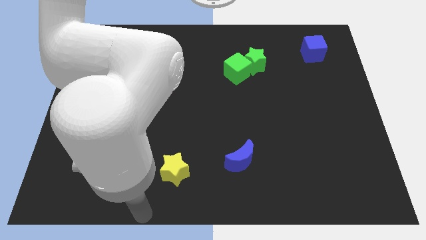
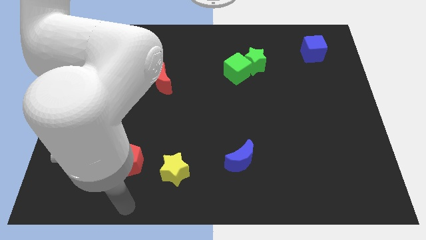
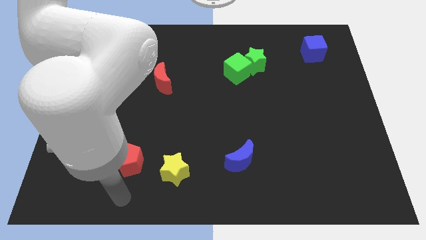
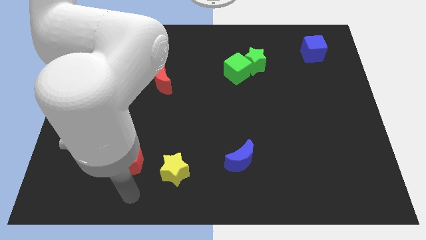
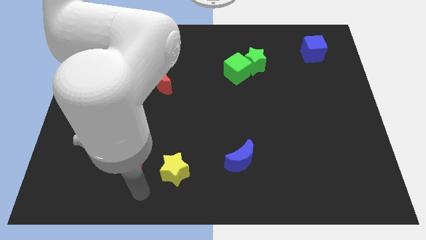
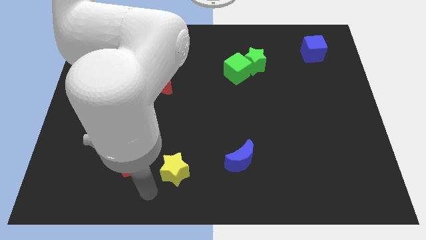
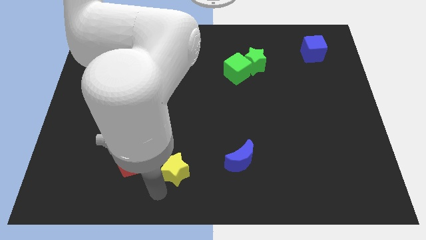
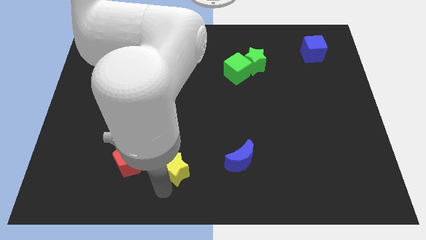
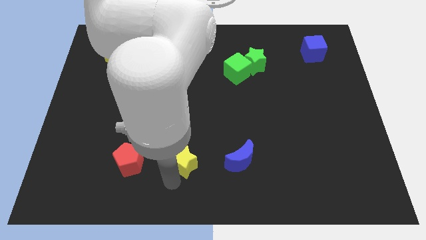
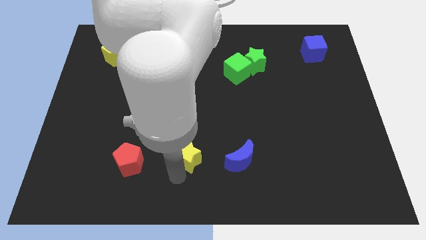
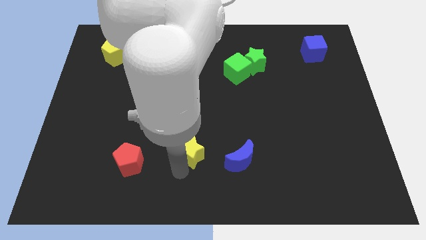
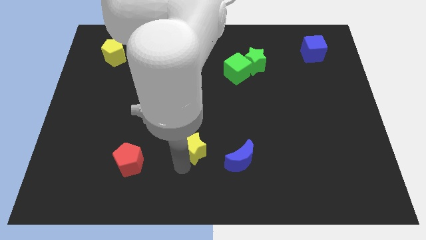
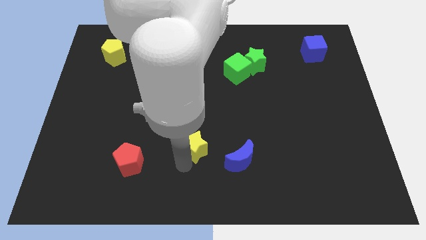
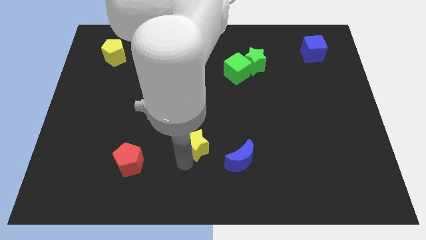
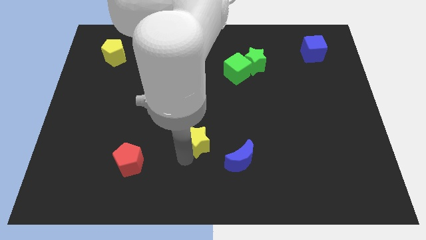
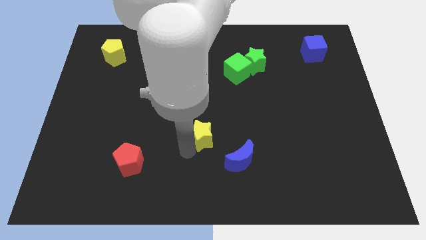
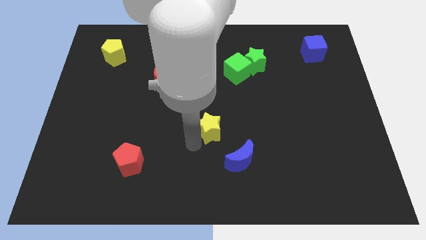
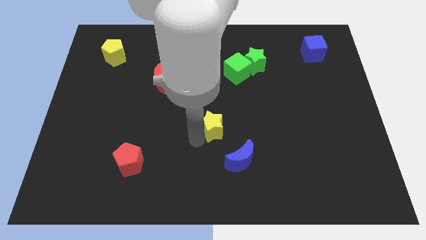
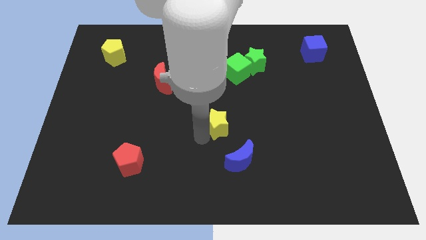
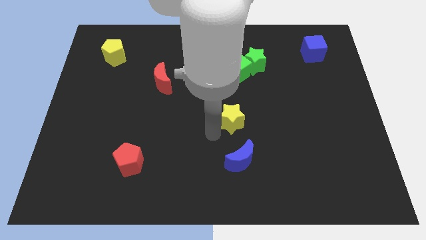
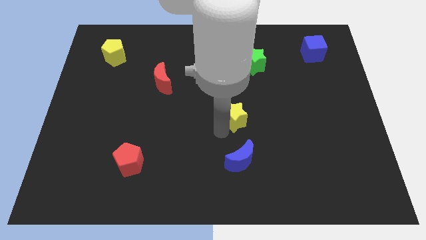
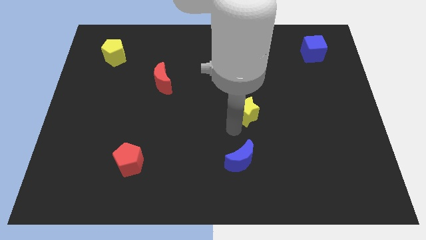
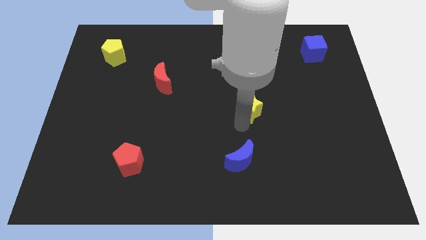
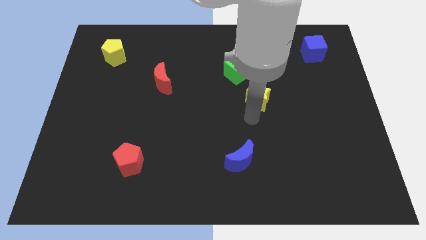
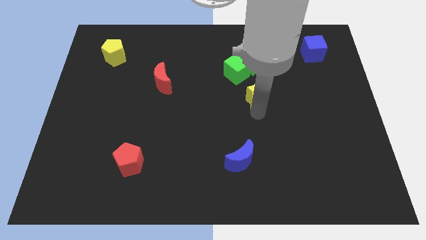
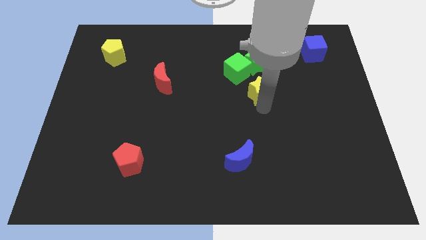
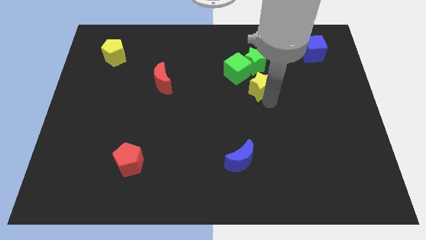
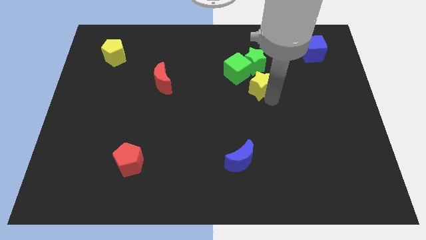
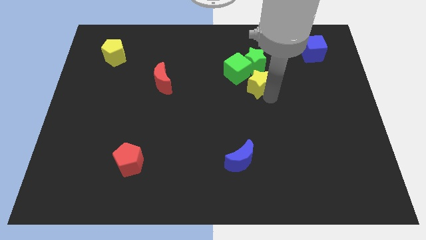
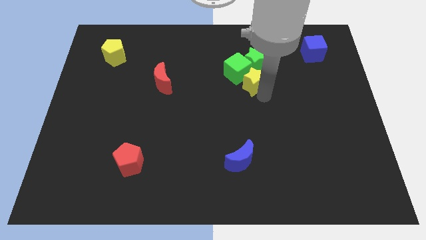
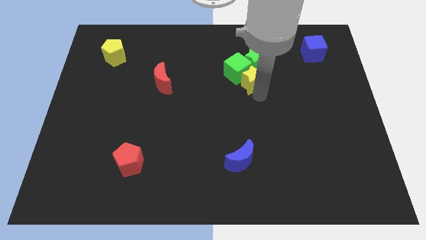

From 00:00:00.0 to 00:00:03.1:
place yellow star below the green cube

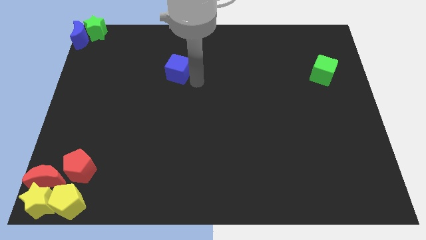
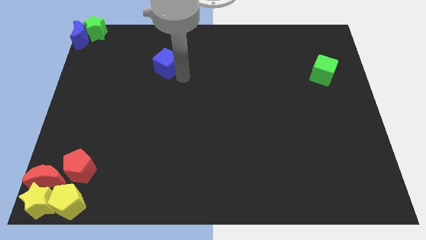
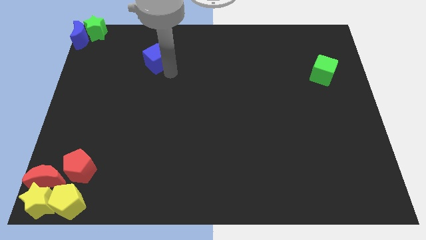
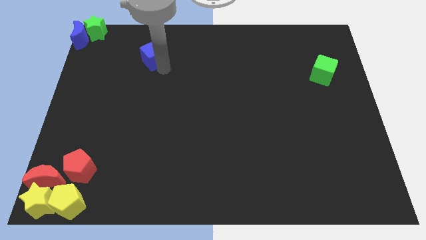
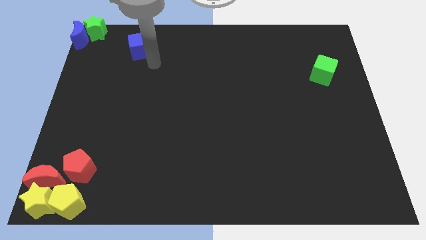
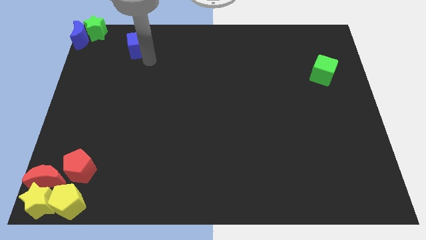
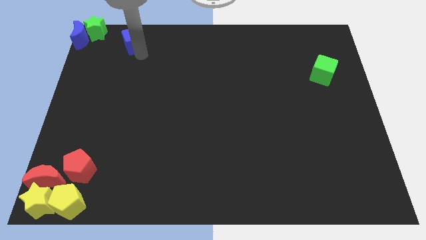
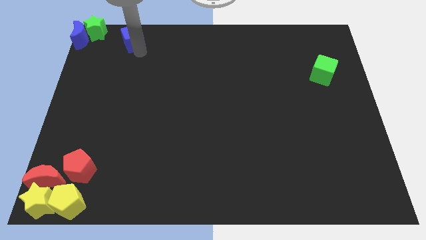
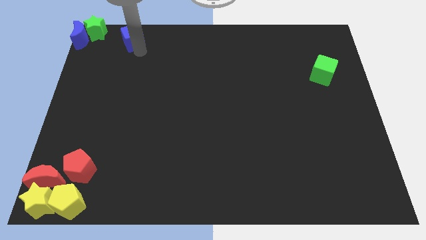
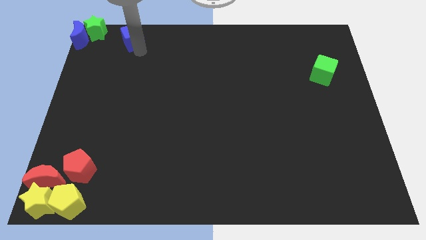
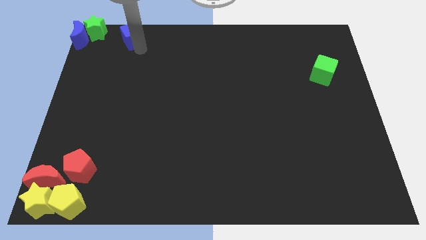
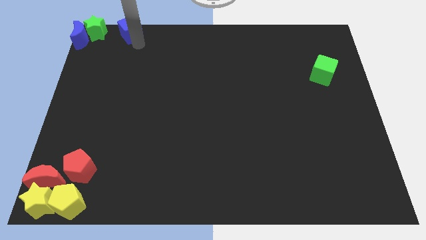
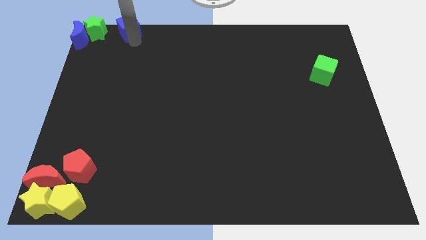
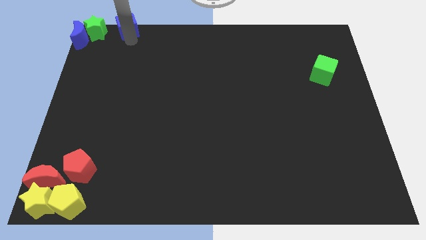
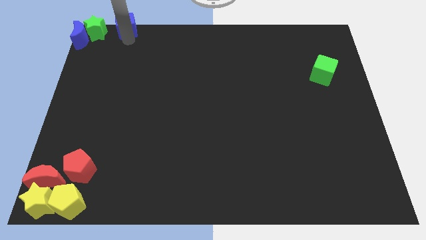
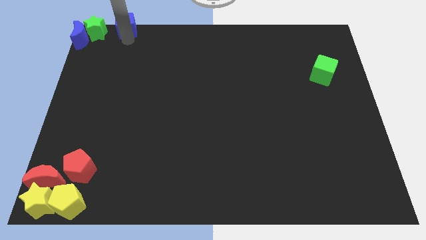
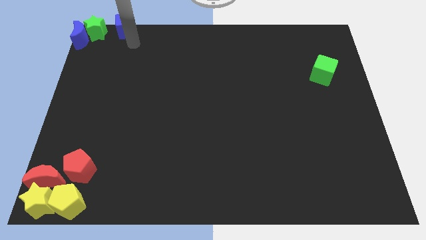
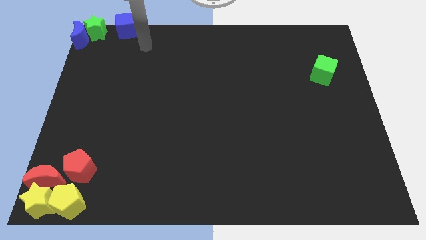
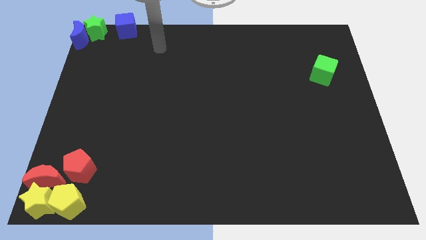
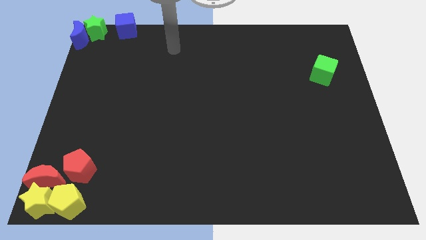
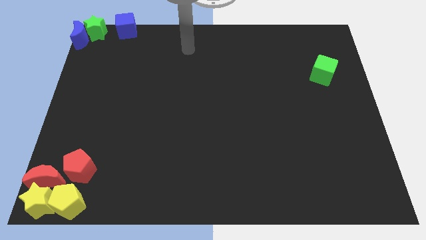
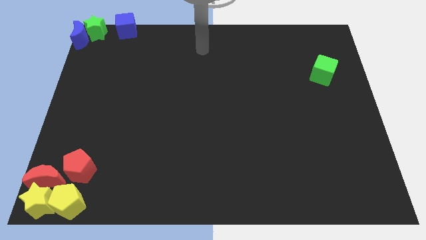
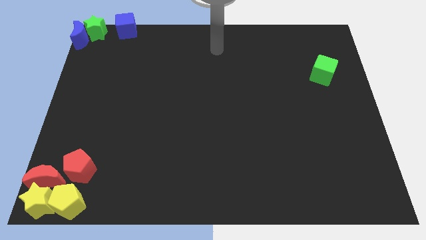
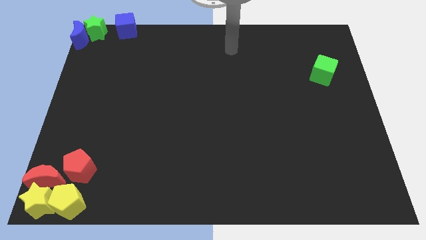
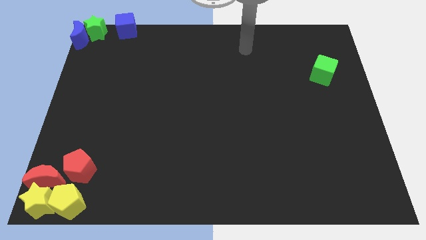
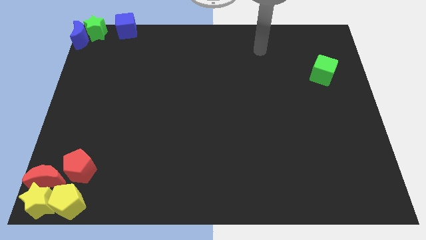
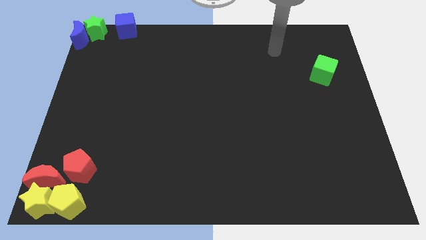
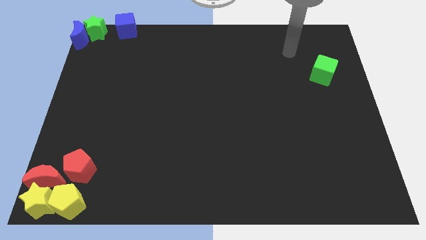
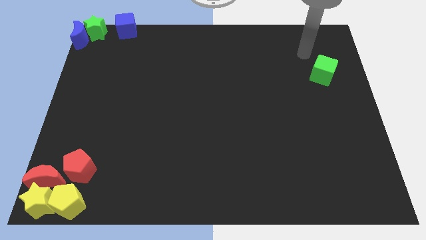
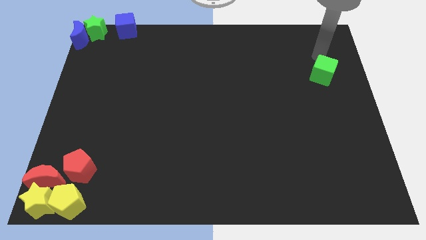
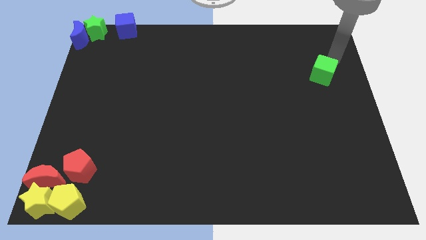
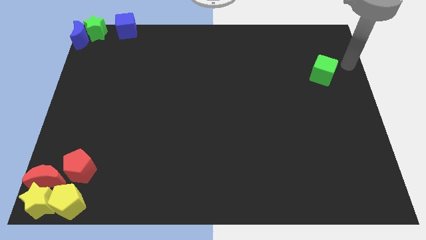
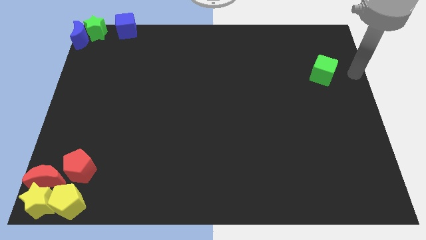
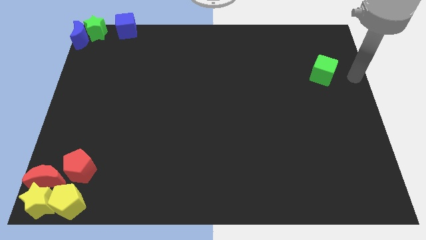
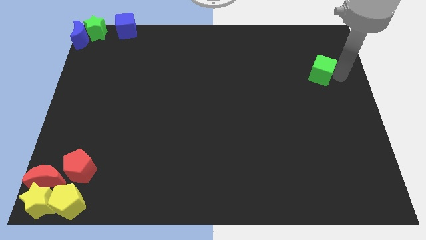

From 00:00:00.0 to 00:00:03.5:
place the arm right to the green cube

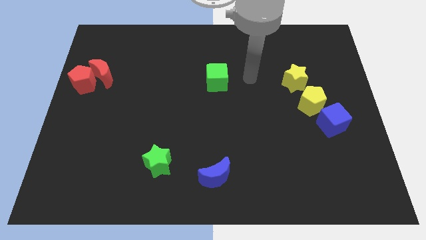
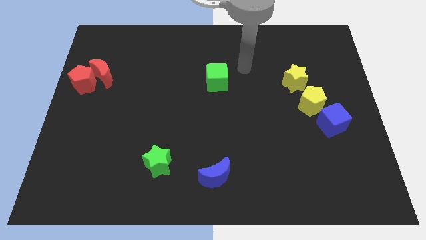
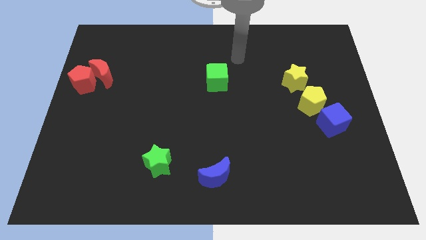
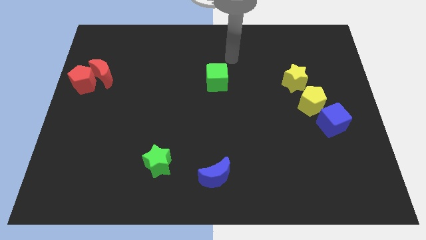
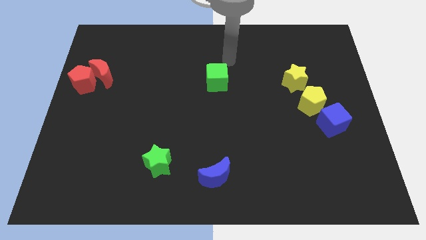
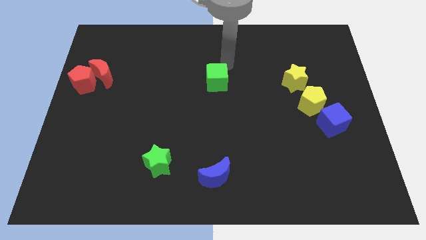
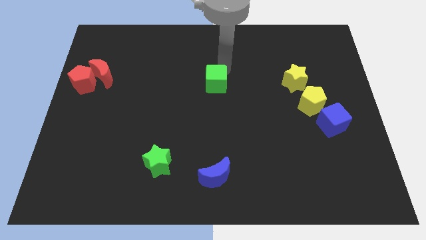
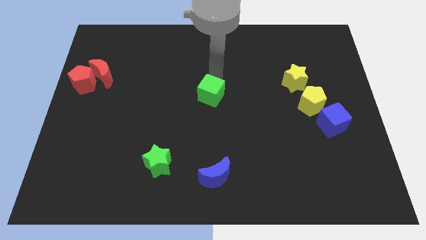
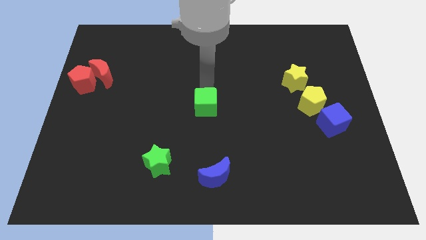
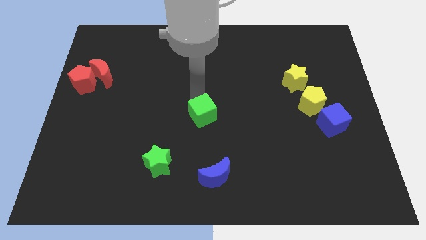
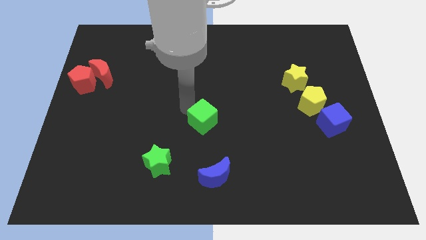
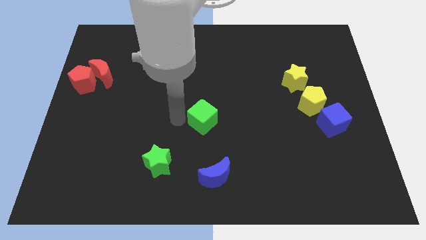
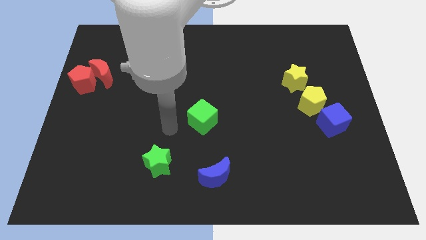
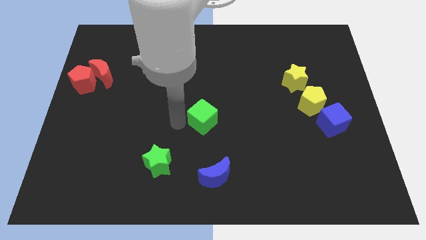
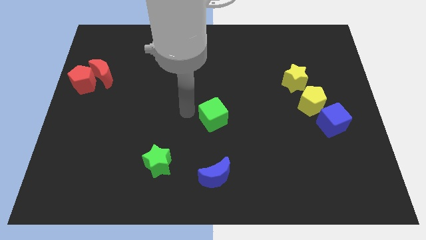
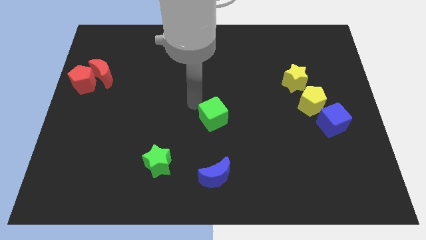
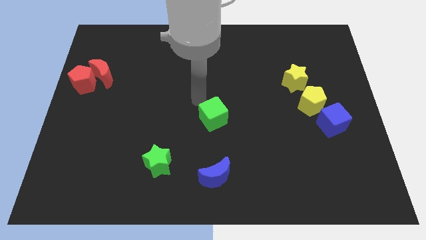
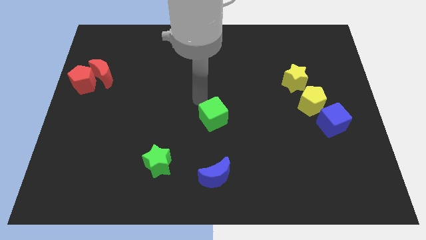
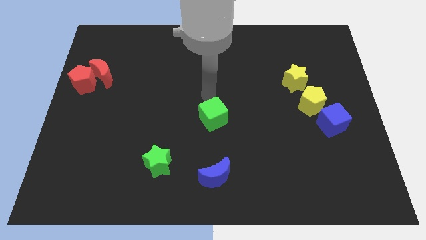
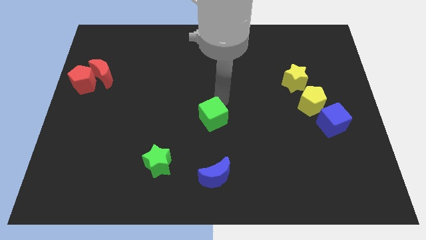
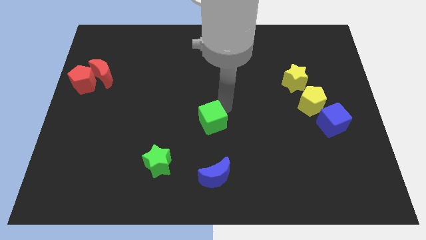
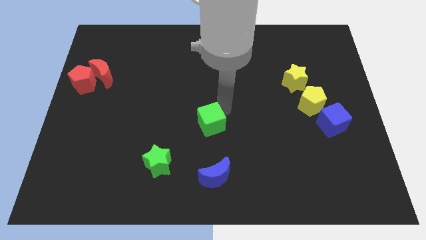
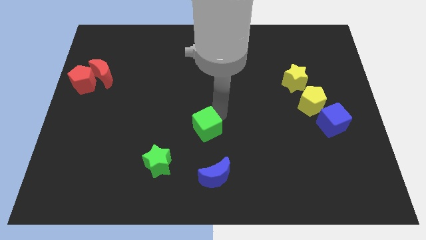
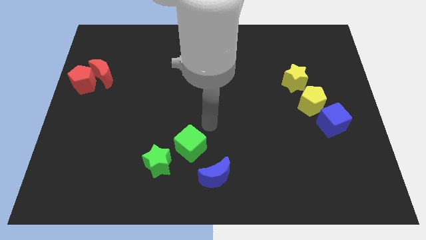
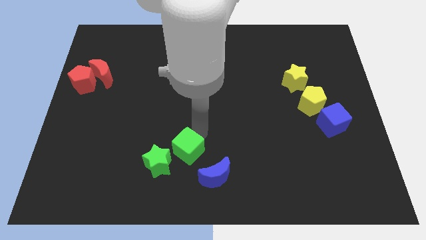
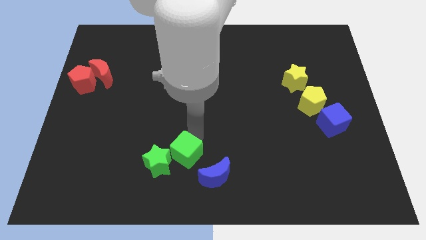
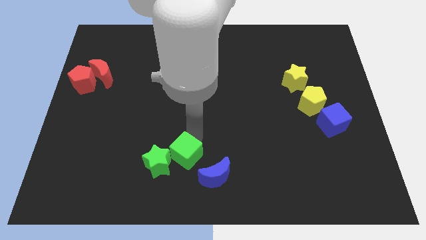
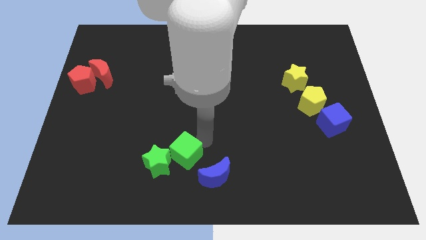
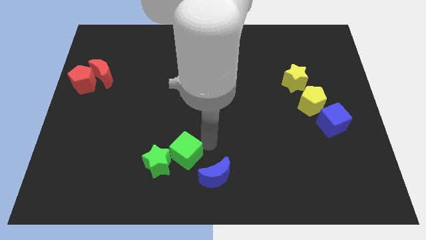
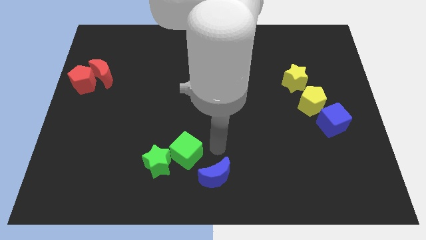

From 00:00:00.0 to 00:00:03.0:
place the green cube to the top right of the green star
